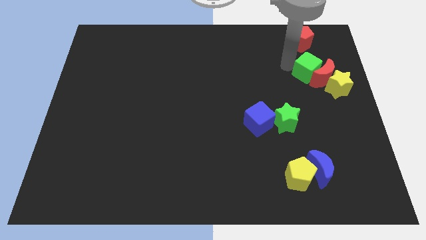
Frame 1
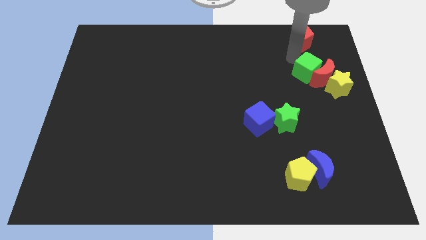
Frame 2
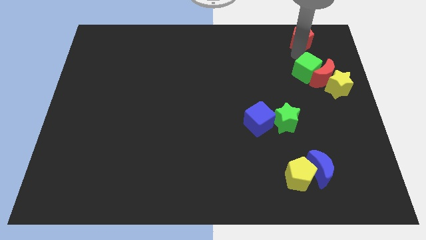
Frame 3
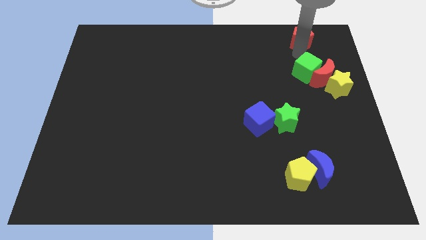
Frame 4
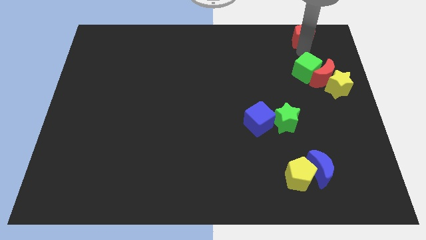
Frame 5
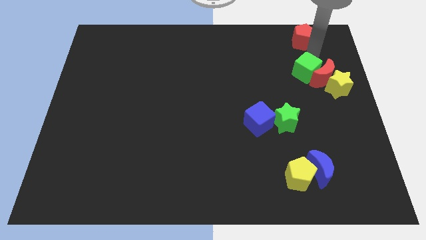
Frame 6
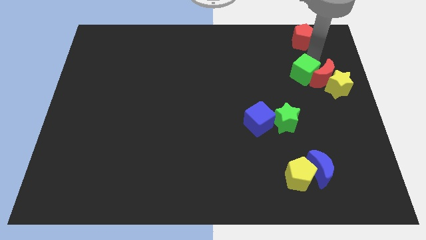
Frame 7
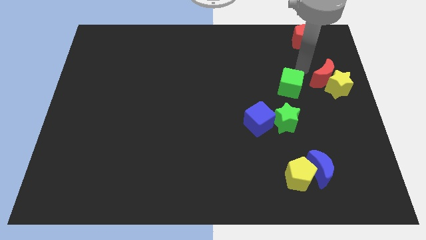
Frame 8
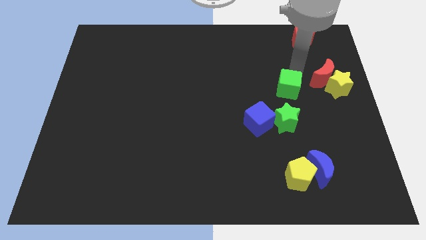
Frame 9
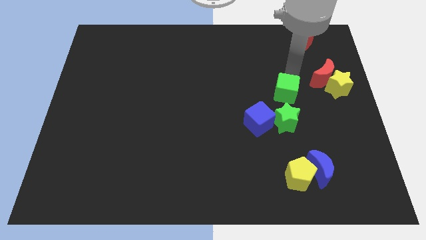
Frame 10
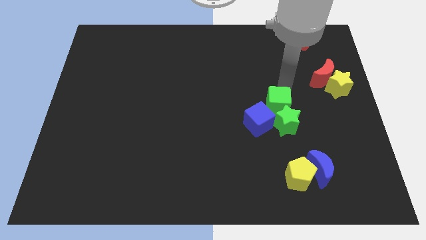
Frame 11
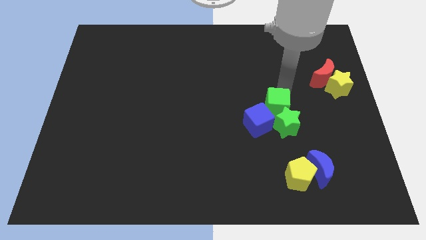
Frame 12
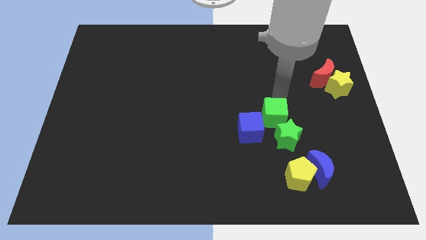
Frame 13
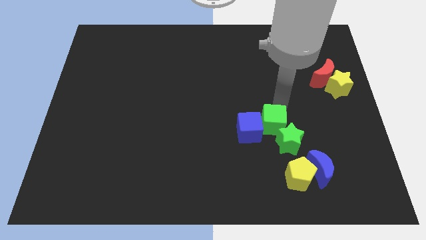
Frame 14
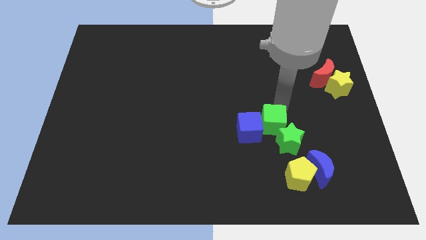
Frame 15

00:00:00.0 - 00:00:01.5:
move the green cube into the green star

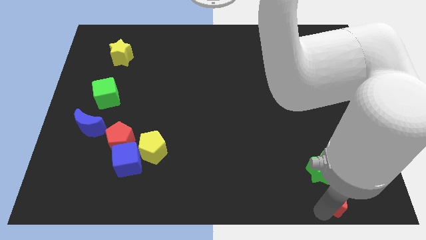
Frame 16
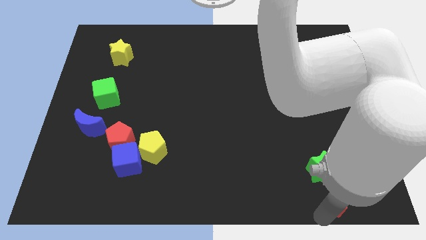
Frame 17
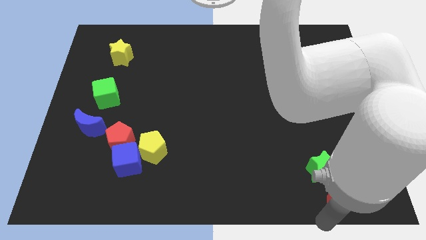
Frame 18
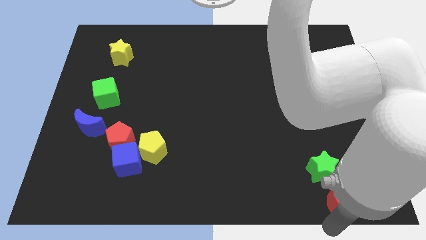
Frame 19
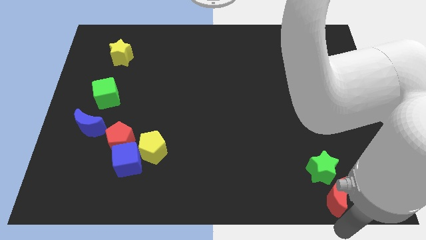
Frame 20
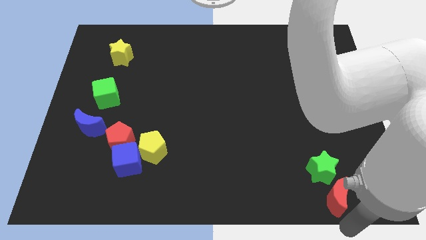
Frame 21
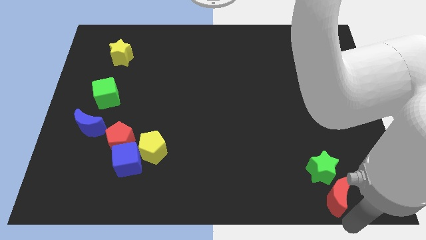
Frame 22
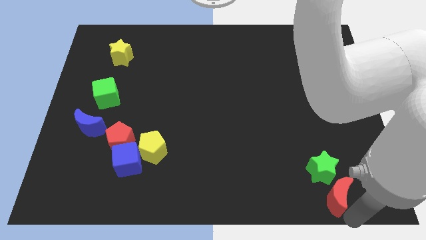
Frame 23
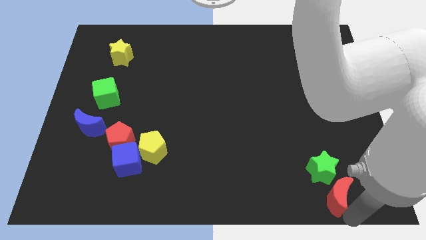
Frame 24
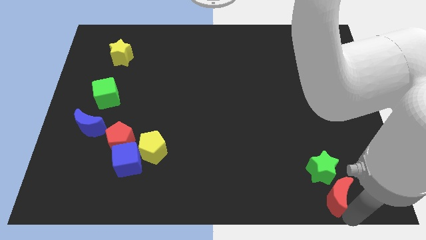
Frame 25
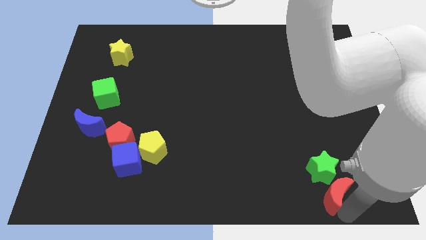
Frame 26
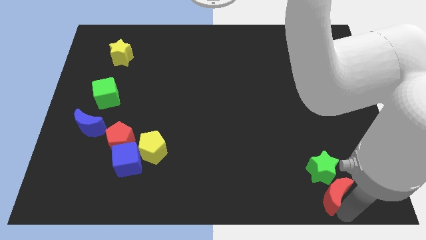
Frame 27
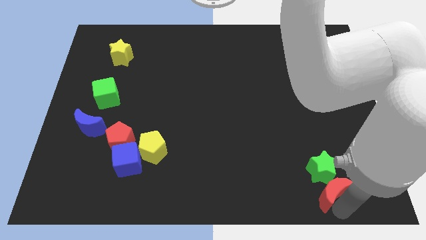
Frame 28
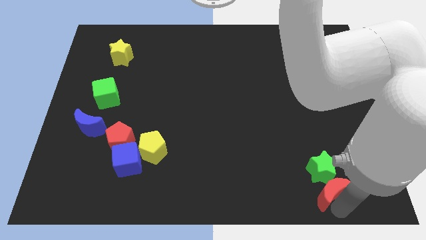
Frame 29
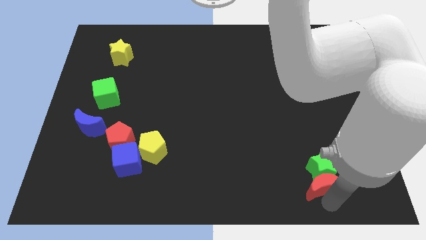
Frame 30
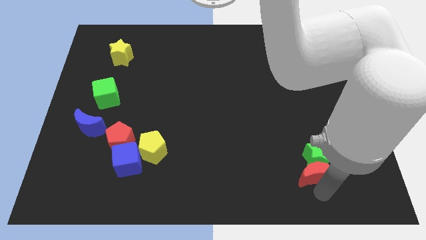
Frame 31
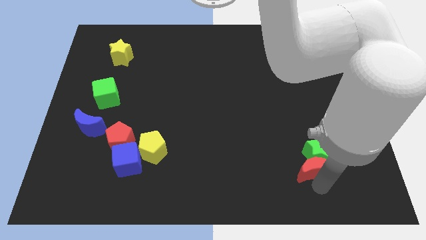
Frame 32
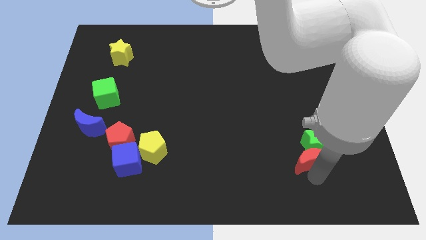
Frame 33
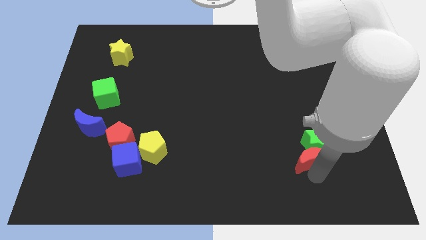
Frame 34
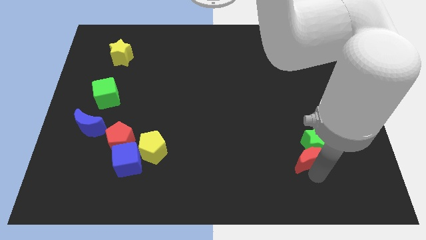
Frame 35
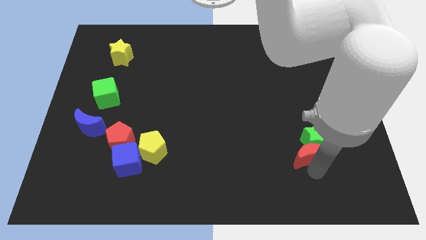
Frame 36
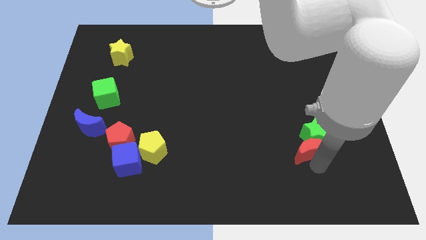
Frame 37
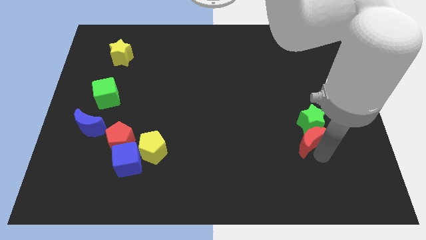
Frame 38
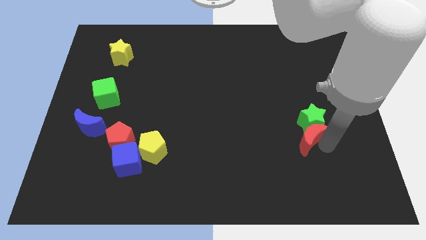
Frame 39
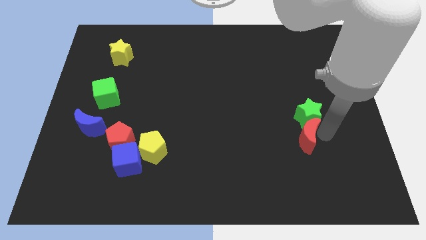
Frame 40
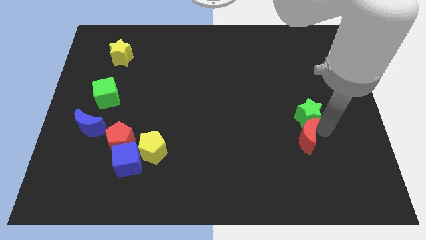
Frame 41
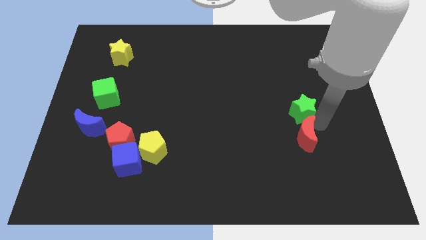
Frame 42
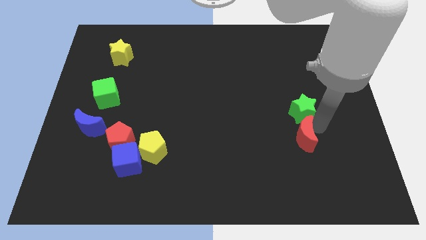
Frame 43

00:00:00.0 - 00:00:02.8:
push the green star along with the red crescent towards the top

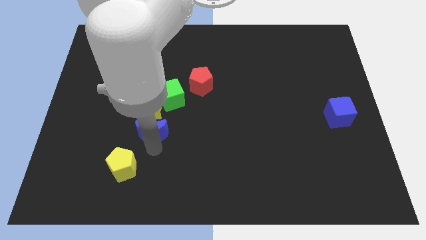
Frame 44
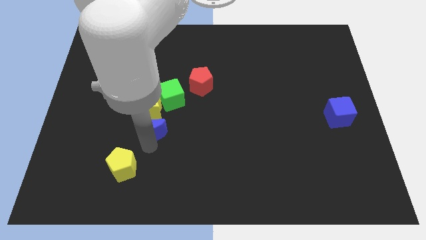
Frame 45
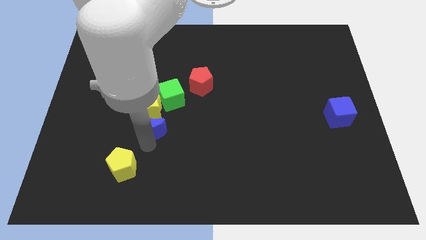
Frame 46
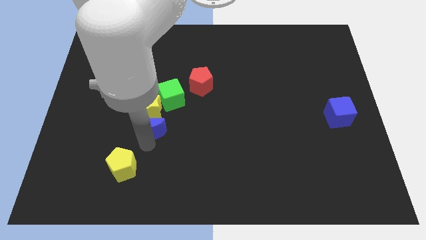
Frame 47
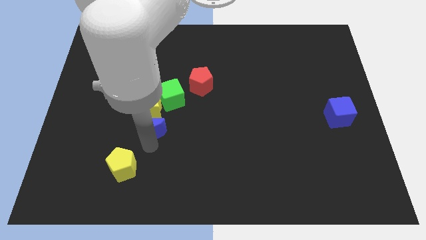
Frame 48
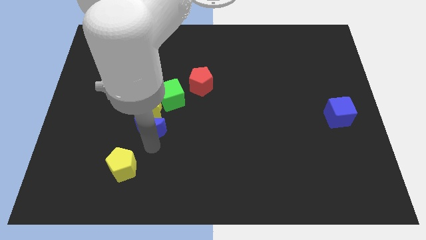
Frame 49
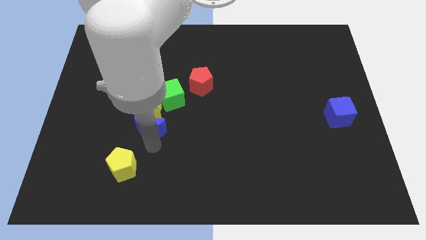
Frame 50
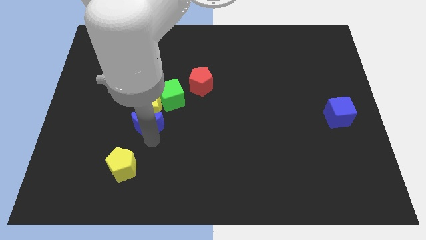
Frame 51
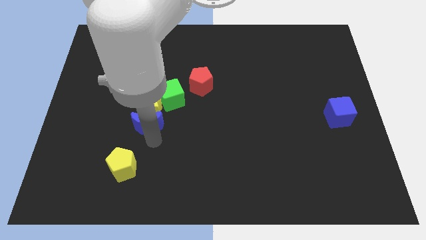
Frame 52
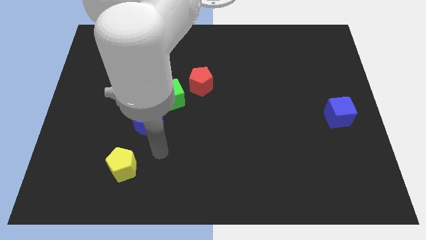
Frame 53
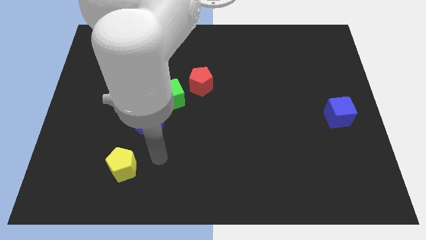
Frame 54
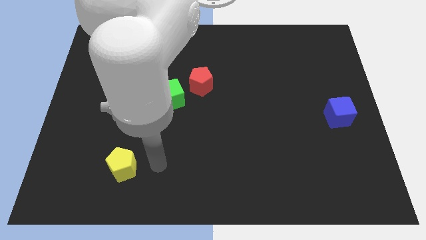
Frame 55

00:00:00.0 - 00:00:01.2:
place blue crescent to the bottom side of the yellow star

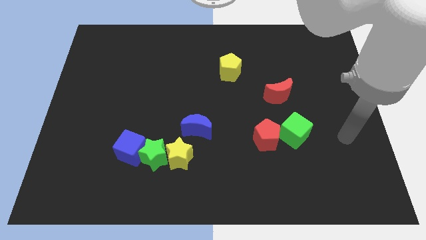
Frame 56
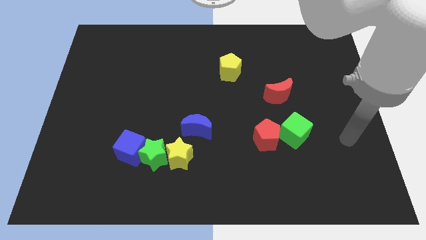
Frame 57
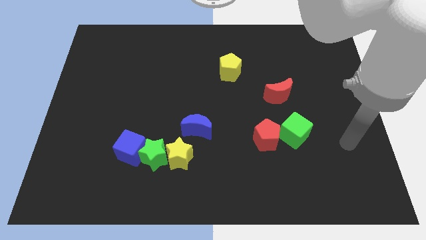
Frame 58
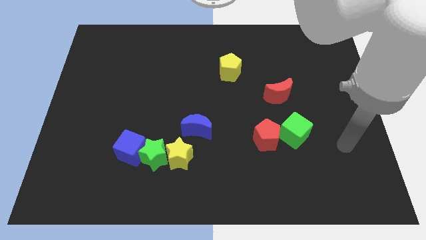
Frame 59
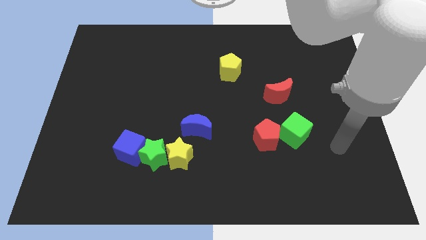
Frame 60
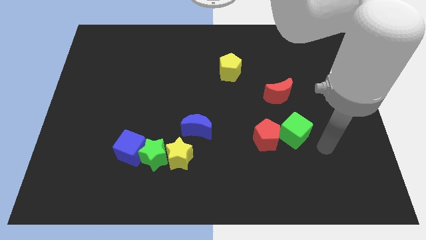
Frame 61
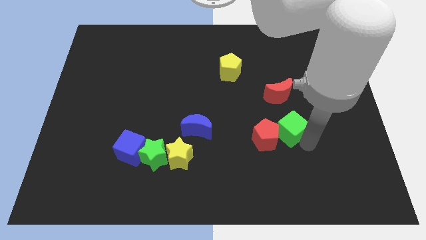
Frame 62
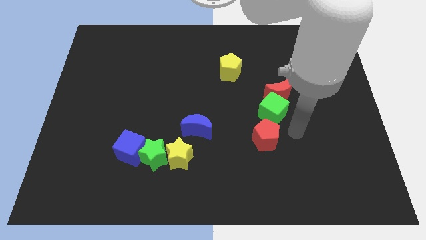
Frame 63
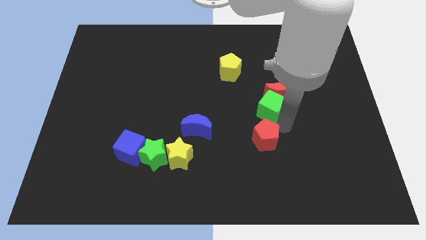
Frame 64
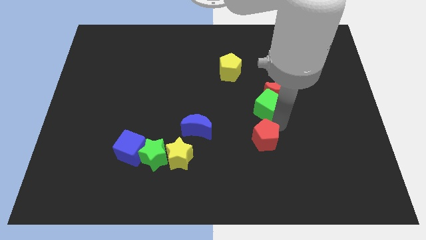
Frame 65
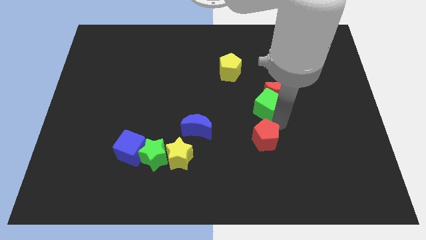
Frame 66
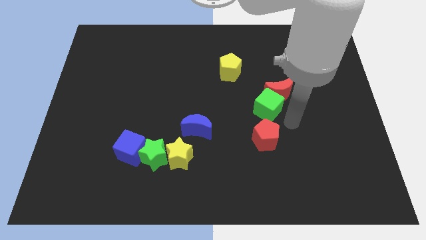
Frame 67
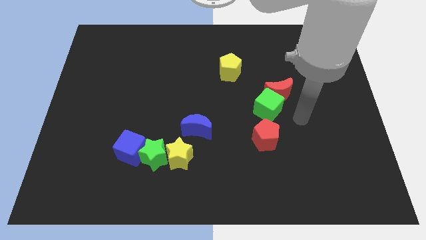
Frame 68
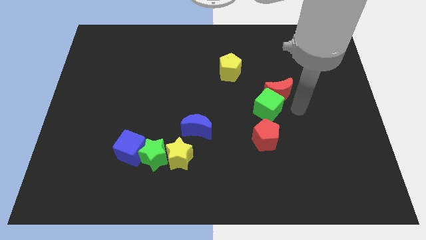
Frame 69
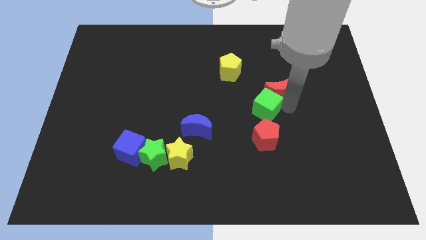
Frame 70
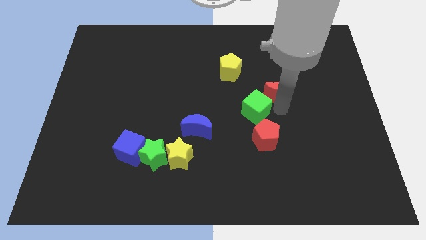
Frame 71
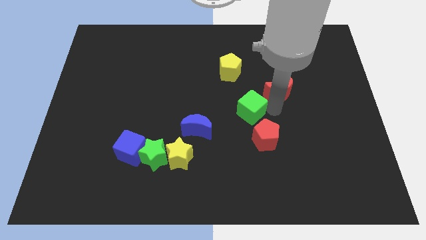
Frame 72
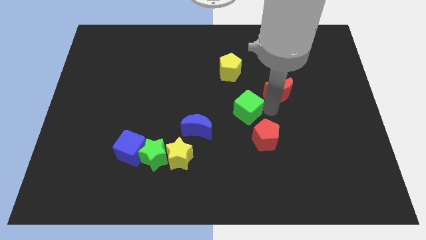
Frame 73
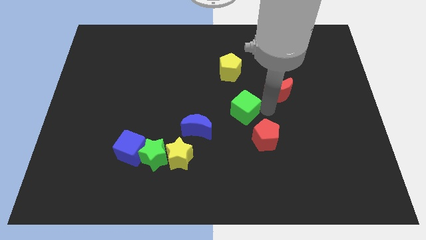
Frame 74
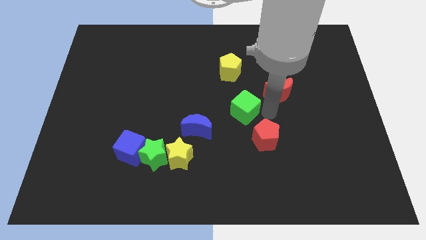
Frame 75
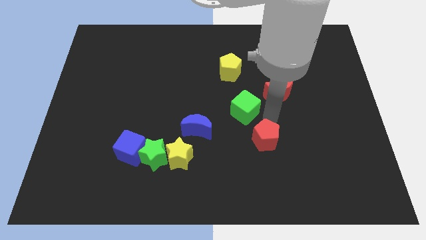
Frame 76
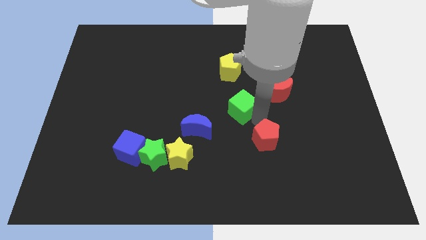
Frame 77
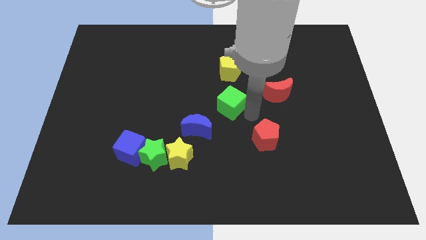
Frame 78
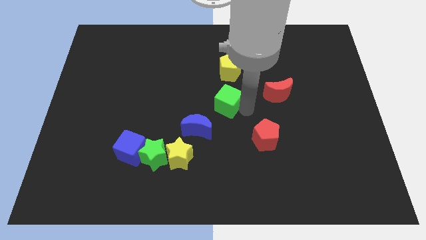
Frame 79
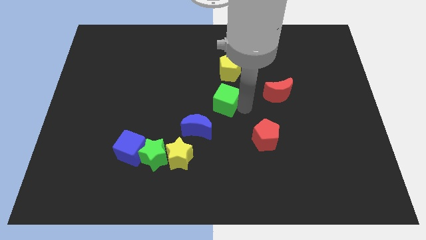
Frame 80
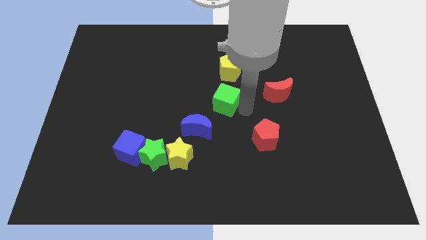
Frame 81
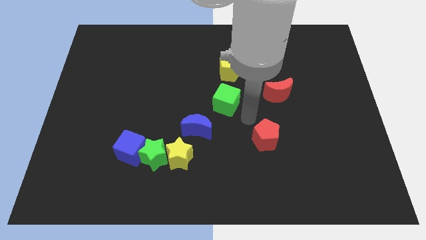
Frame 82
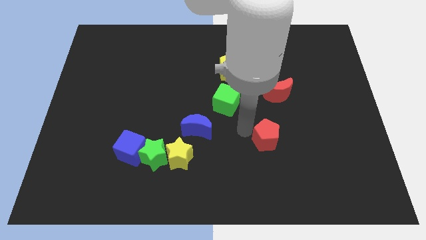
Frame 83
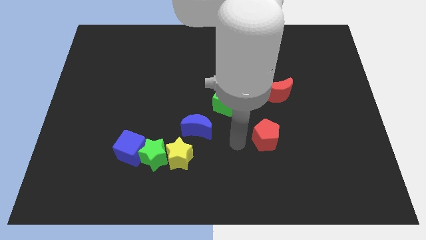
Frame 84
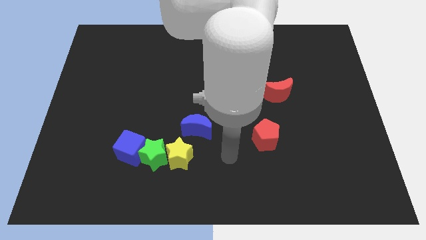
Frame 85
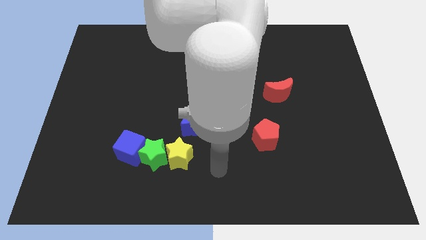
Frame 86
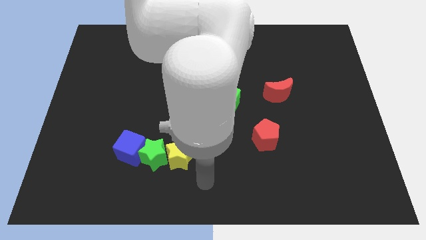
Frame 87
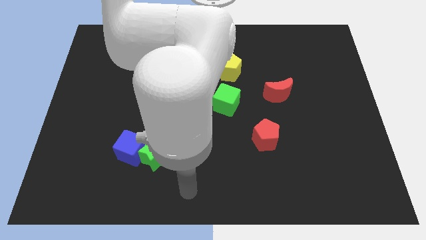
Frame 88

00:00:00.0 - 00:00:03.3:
place the green cube below the yellow pentagon

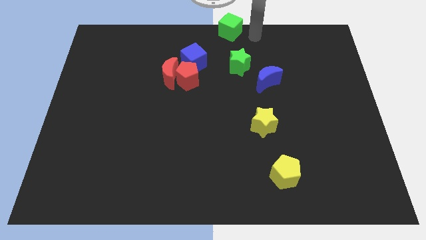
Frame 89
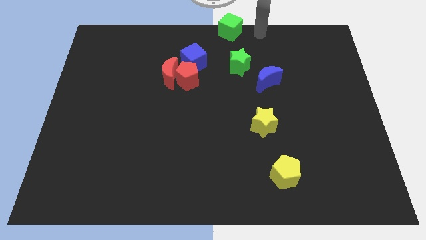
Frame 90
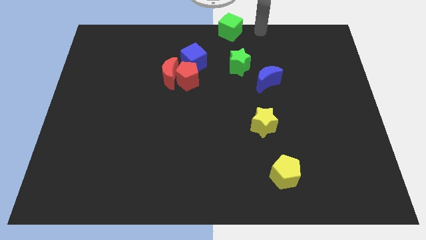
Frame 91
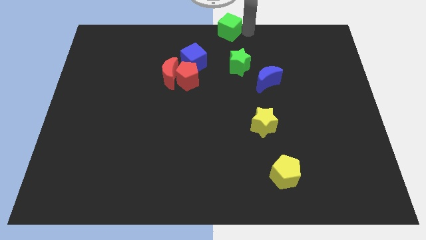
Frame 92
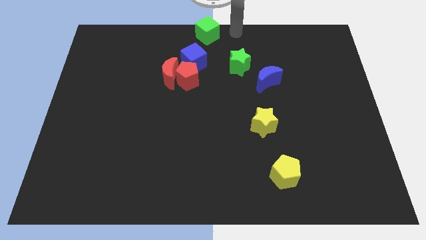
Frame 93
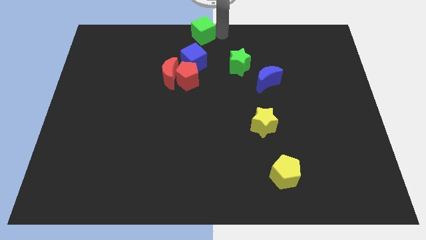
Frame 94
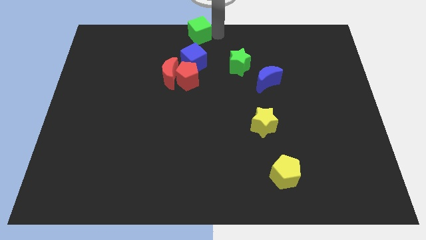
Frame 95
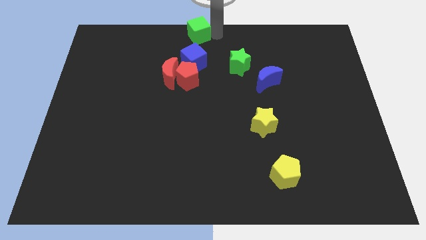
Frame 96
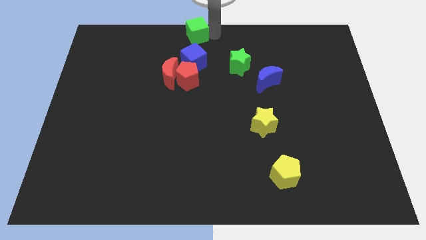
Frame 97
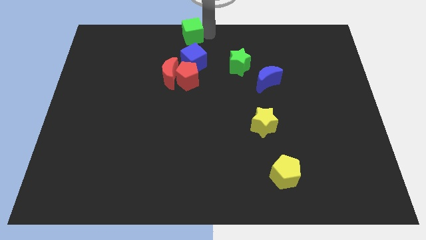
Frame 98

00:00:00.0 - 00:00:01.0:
move the green cube above the blue cube
